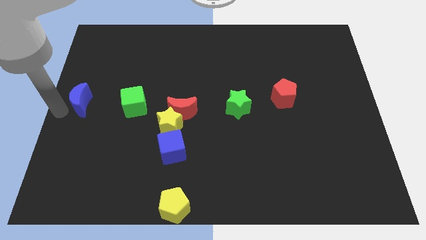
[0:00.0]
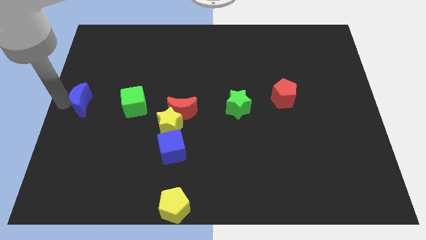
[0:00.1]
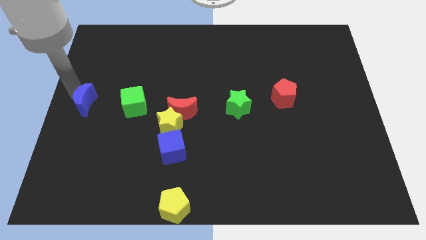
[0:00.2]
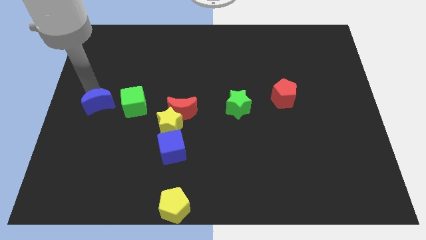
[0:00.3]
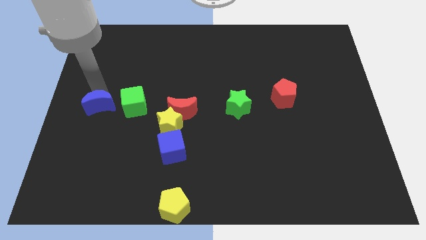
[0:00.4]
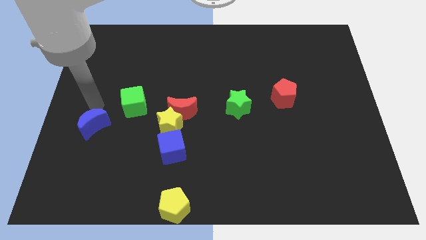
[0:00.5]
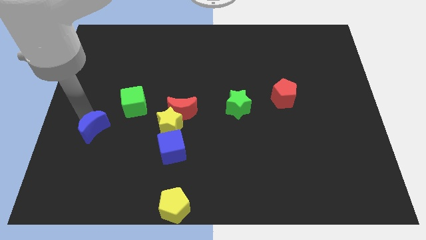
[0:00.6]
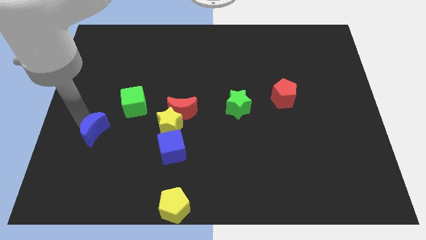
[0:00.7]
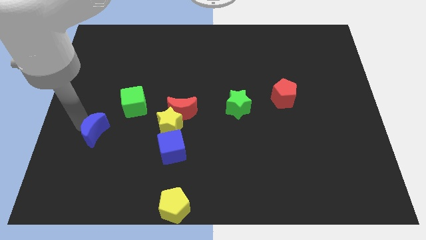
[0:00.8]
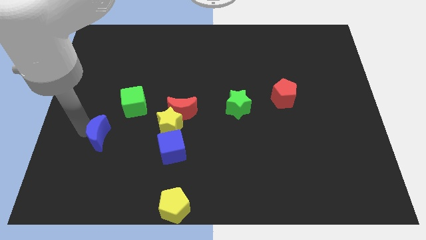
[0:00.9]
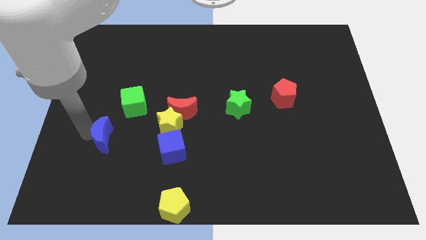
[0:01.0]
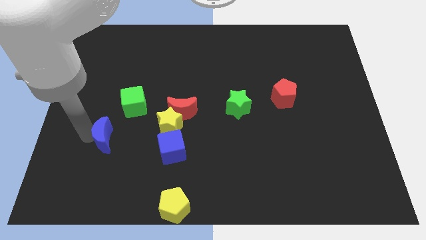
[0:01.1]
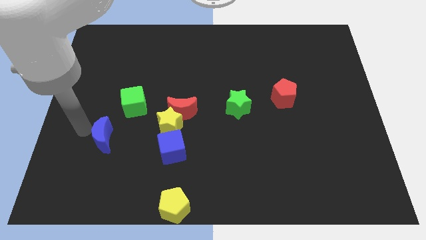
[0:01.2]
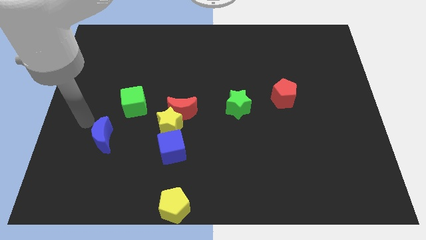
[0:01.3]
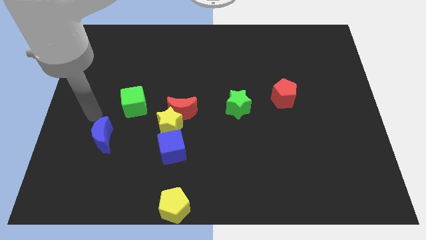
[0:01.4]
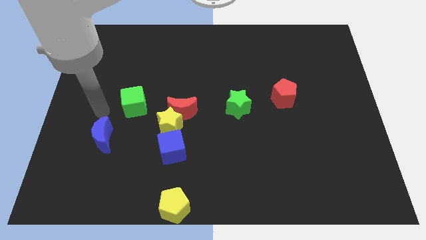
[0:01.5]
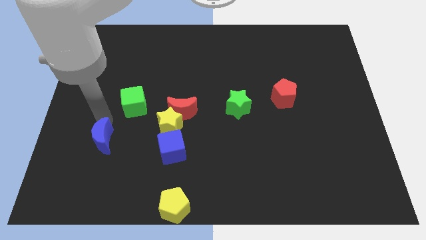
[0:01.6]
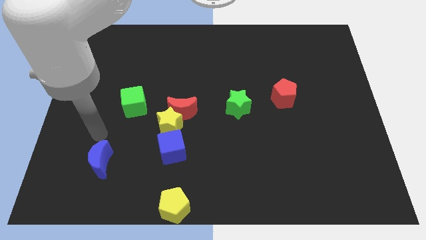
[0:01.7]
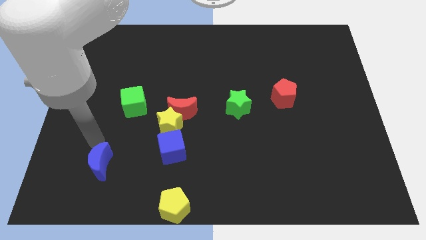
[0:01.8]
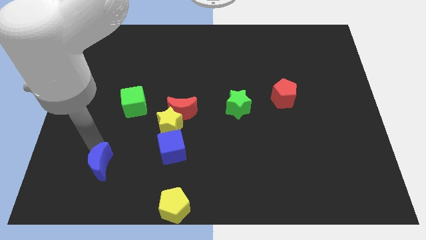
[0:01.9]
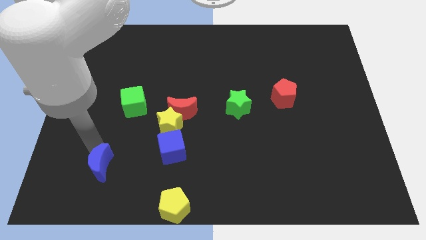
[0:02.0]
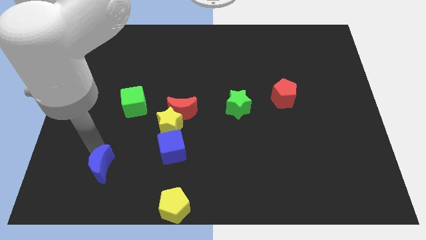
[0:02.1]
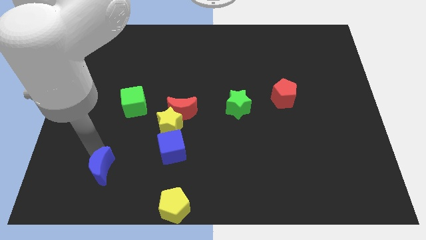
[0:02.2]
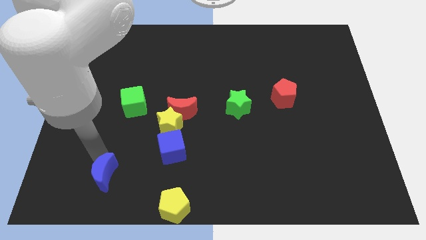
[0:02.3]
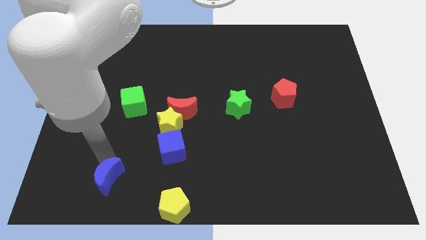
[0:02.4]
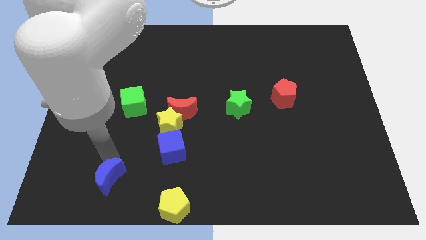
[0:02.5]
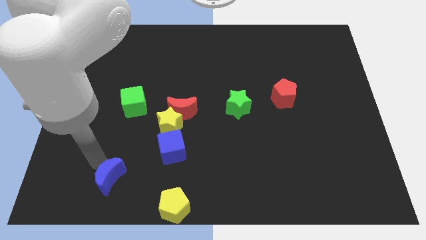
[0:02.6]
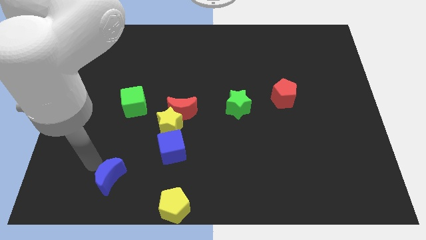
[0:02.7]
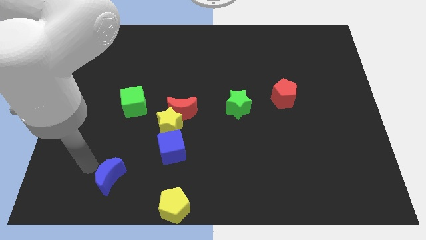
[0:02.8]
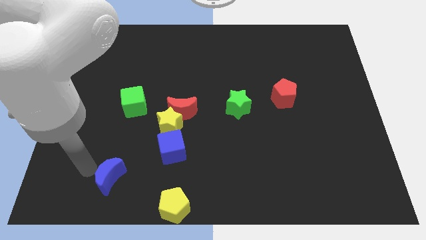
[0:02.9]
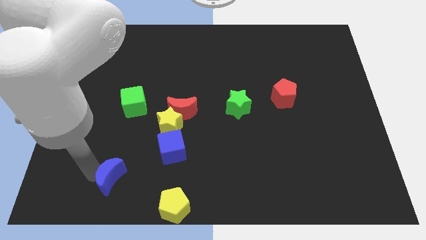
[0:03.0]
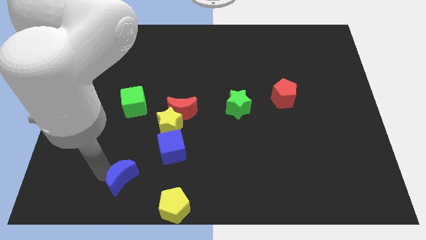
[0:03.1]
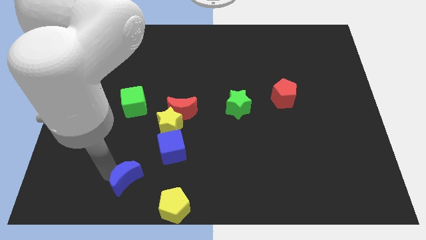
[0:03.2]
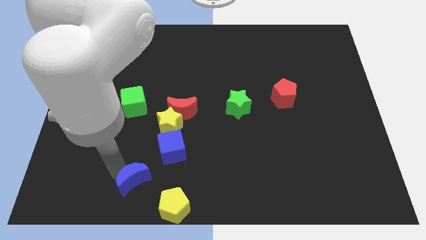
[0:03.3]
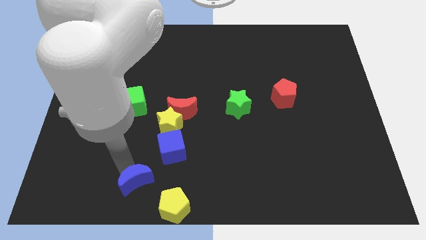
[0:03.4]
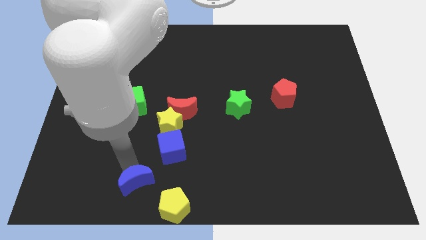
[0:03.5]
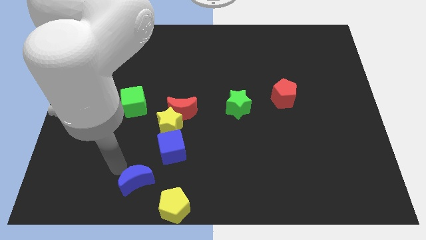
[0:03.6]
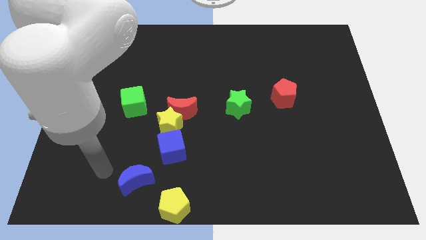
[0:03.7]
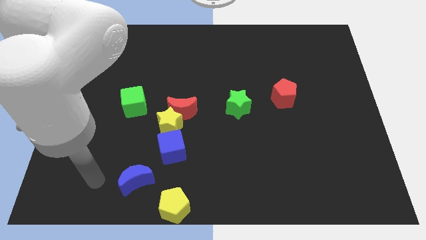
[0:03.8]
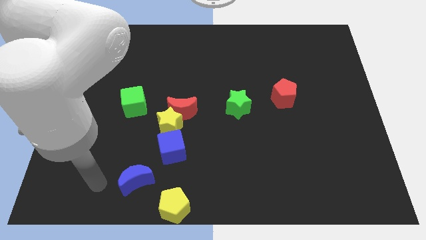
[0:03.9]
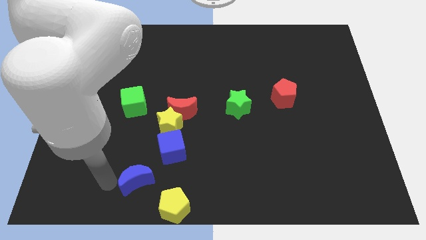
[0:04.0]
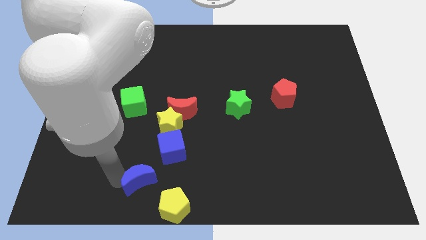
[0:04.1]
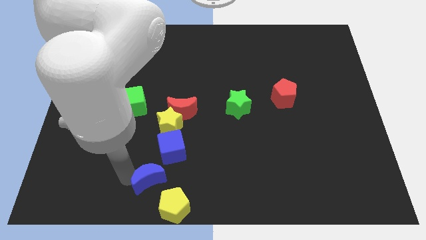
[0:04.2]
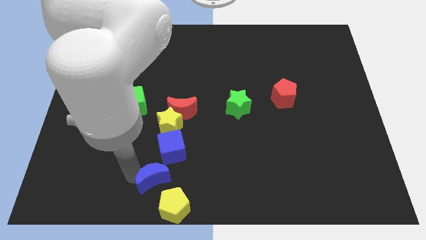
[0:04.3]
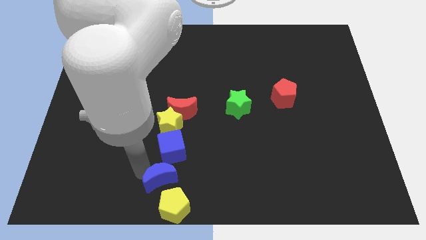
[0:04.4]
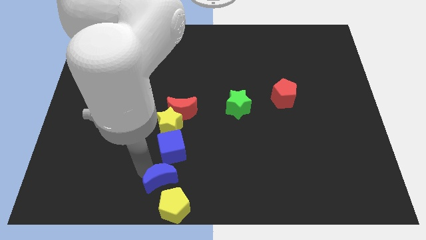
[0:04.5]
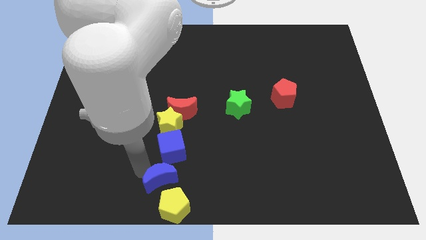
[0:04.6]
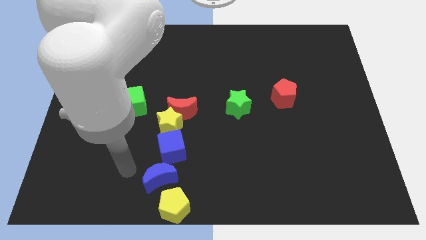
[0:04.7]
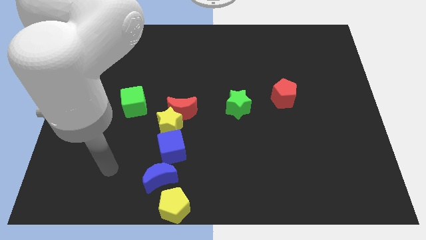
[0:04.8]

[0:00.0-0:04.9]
push the blue moon down to the blue cube

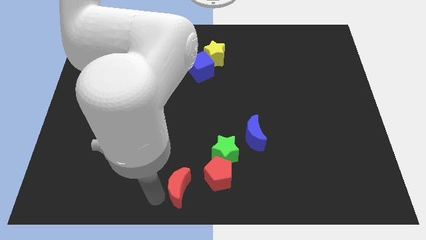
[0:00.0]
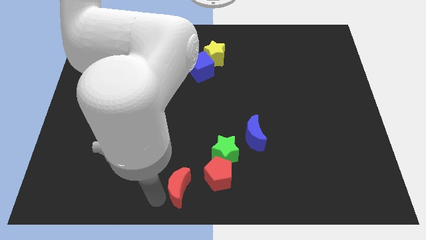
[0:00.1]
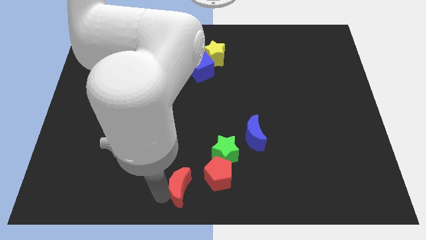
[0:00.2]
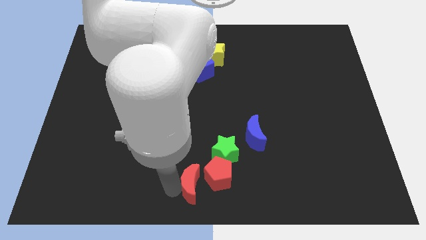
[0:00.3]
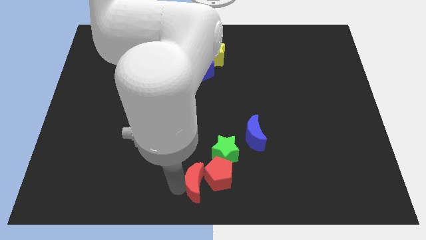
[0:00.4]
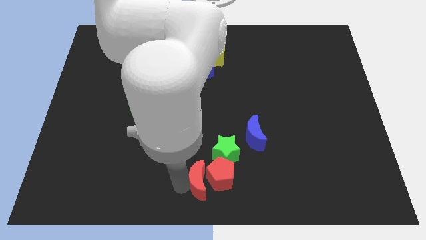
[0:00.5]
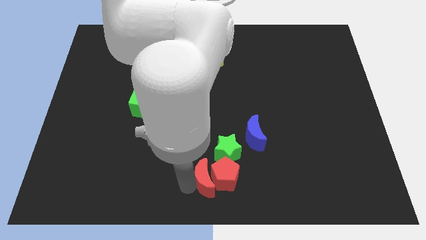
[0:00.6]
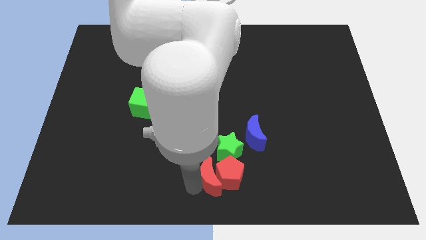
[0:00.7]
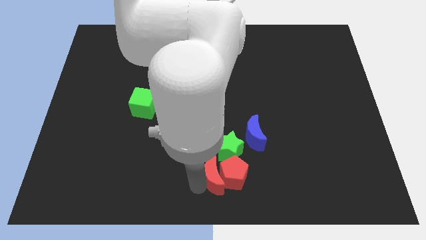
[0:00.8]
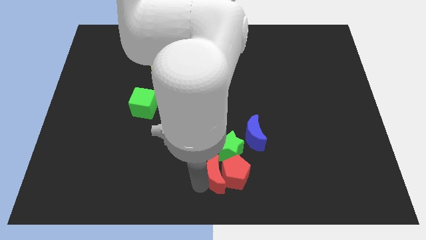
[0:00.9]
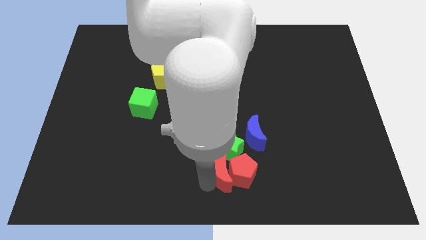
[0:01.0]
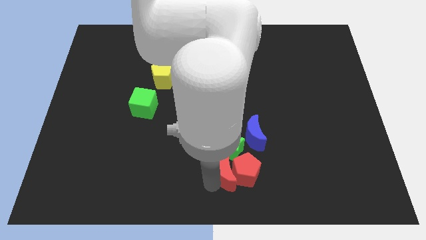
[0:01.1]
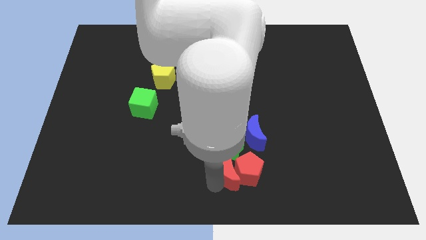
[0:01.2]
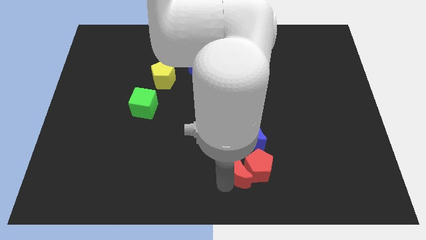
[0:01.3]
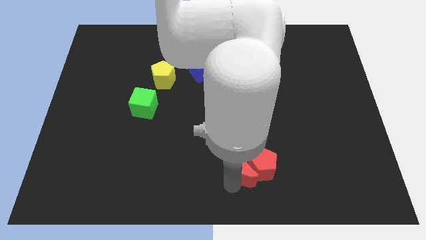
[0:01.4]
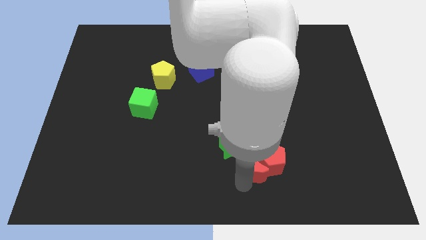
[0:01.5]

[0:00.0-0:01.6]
push the red pentagon with red crescent

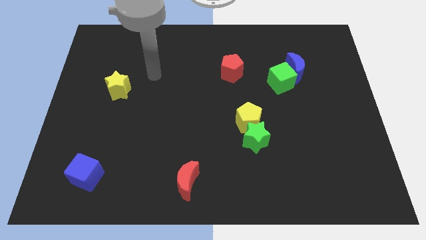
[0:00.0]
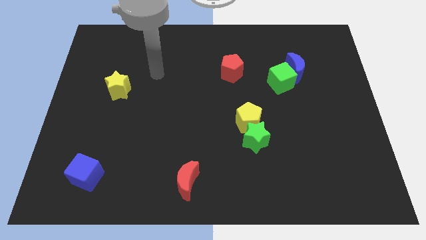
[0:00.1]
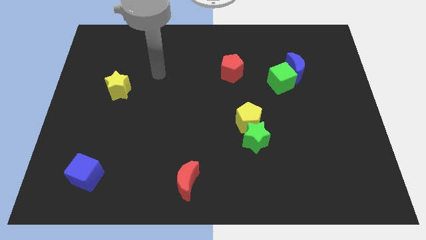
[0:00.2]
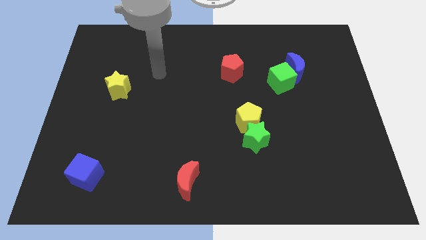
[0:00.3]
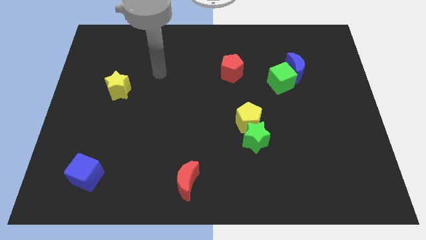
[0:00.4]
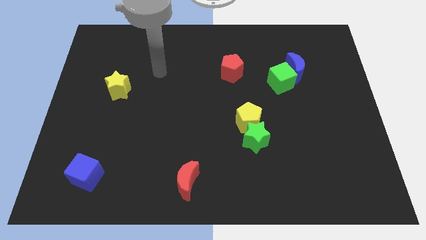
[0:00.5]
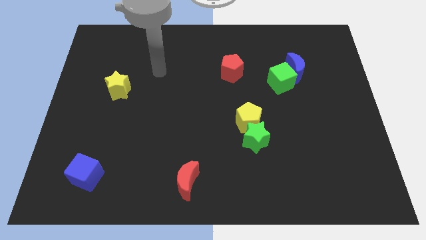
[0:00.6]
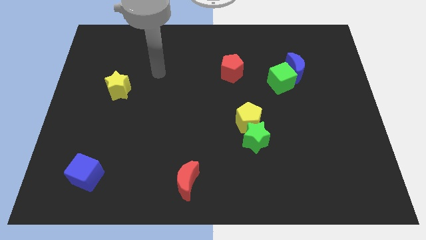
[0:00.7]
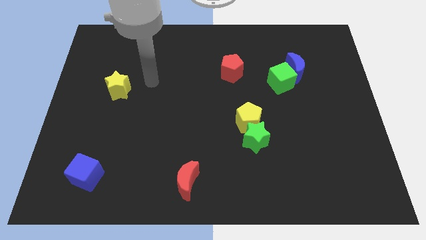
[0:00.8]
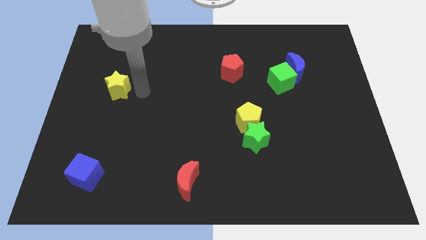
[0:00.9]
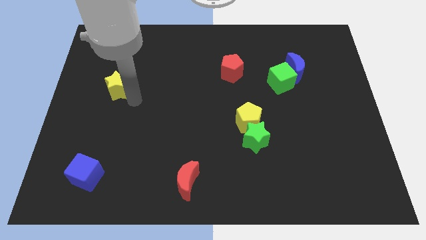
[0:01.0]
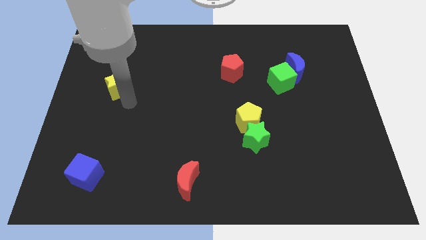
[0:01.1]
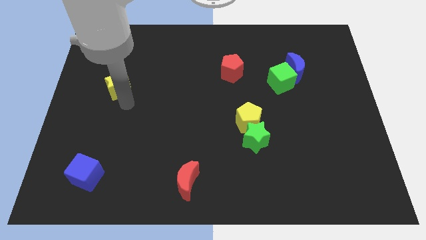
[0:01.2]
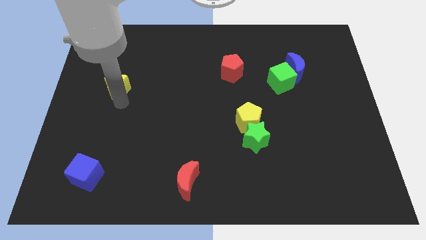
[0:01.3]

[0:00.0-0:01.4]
move the arm below the yellow star

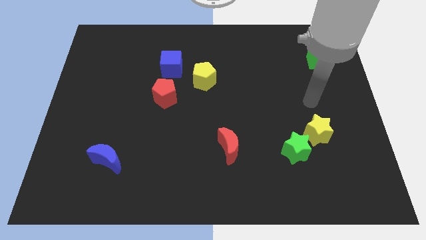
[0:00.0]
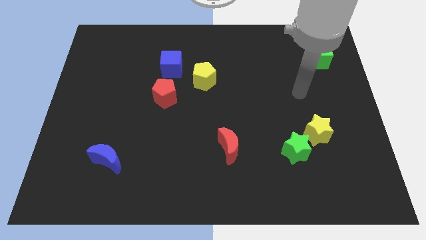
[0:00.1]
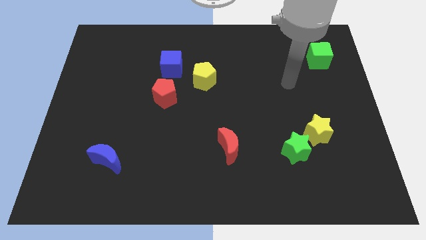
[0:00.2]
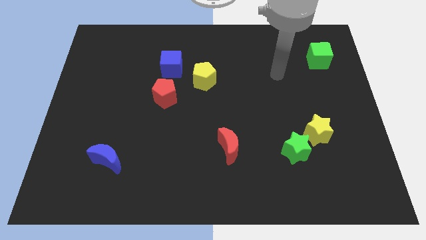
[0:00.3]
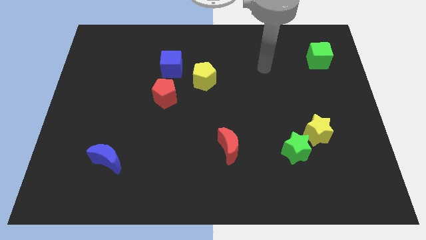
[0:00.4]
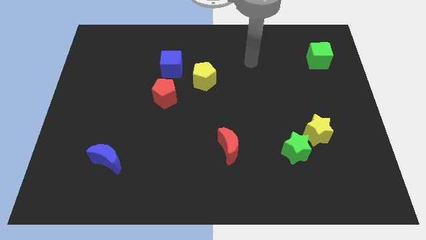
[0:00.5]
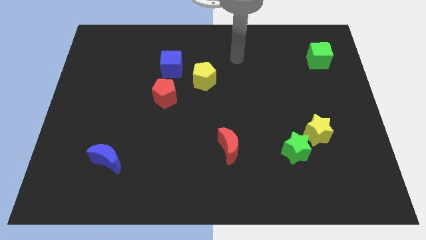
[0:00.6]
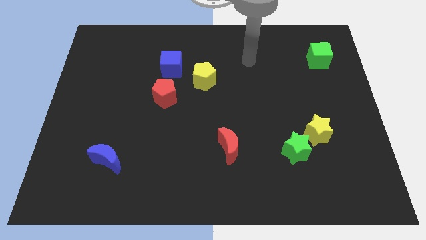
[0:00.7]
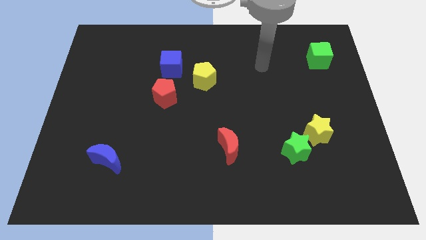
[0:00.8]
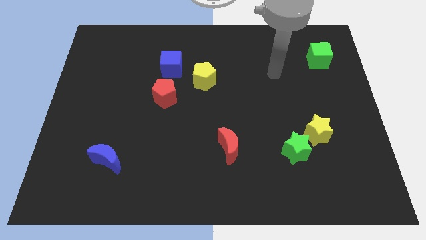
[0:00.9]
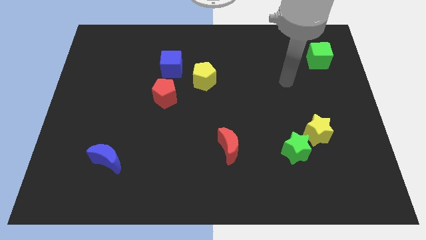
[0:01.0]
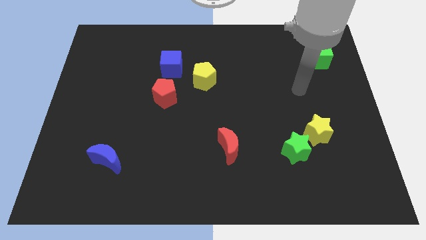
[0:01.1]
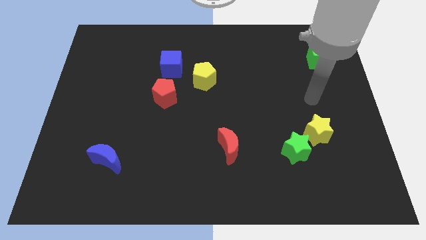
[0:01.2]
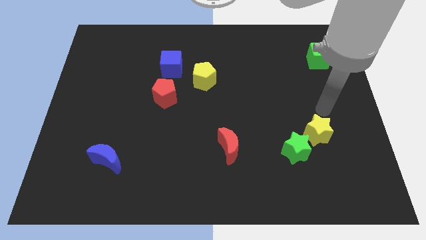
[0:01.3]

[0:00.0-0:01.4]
move your arm to the top of yellow star
